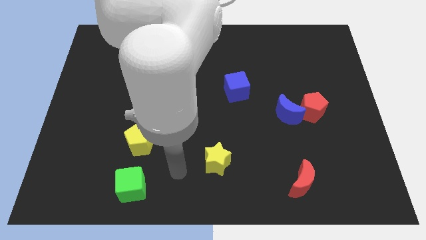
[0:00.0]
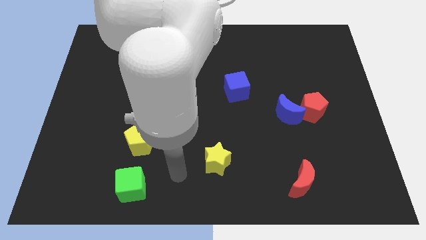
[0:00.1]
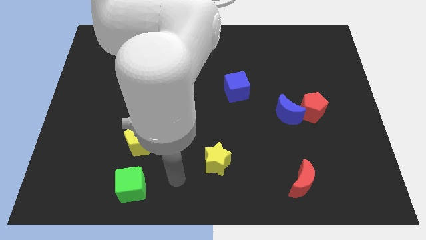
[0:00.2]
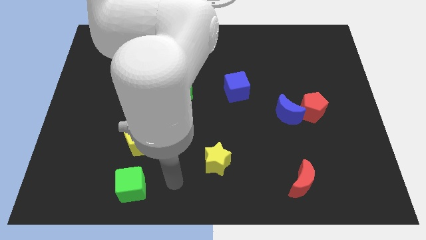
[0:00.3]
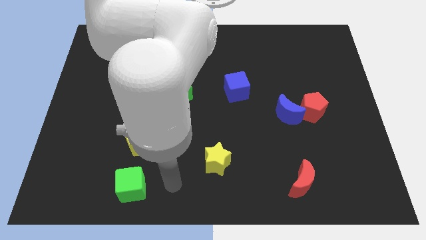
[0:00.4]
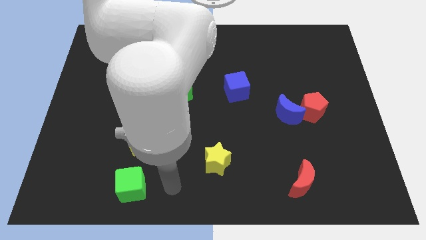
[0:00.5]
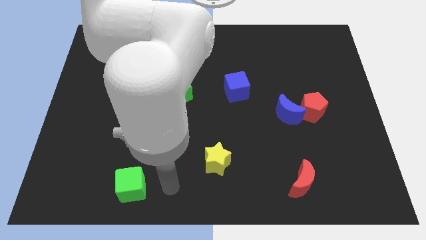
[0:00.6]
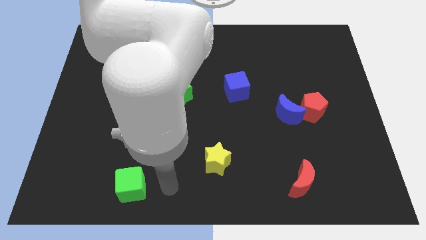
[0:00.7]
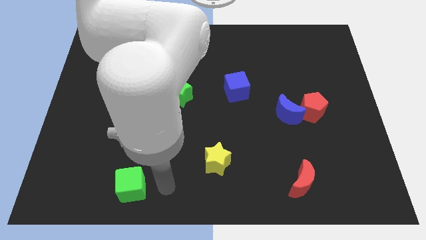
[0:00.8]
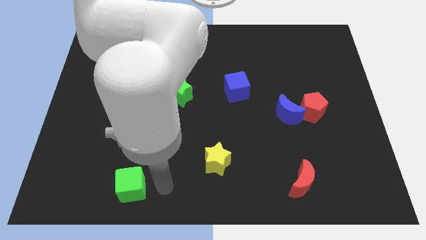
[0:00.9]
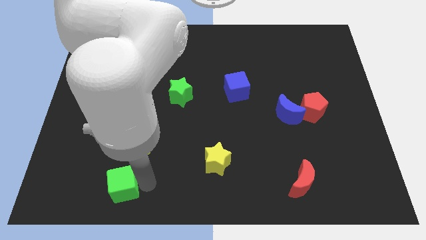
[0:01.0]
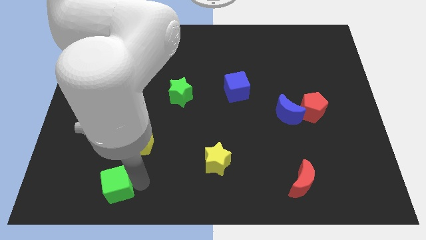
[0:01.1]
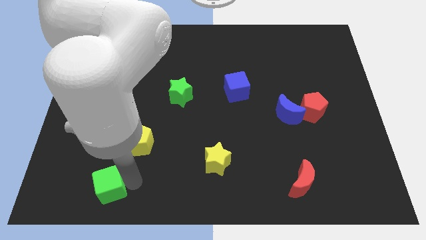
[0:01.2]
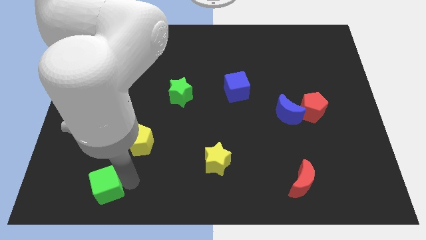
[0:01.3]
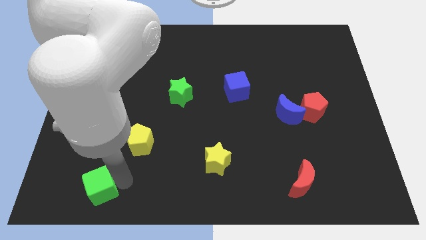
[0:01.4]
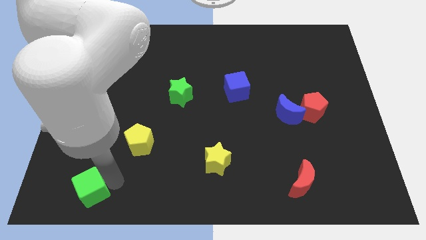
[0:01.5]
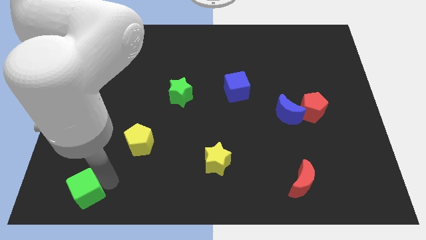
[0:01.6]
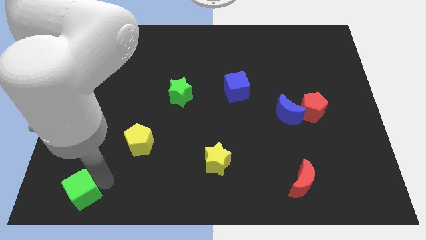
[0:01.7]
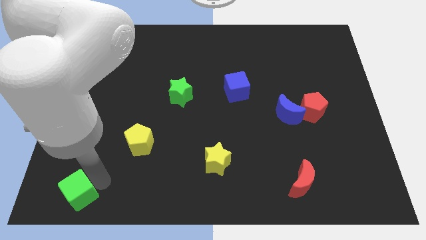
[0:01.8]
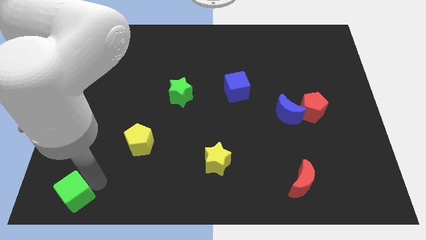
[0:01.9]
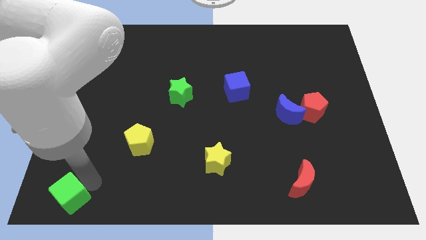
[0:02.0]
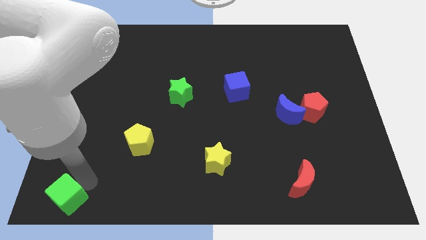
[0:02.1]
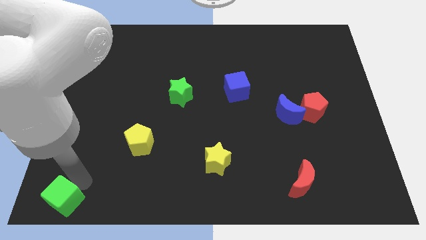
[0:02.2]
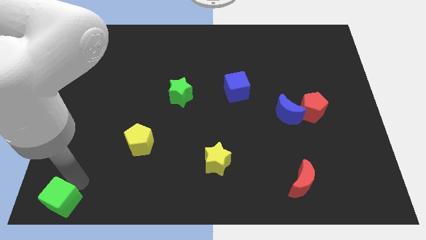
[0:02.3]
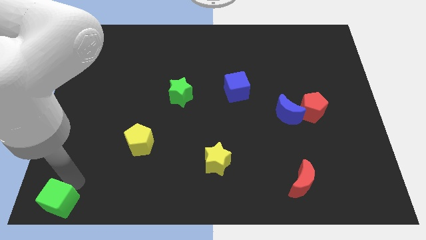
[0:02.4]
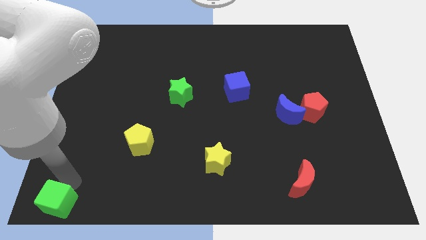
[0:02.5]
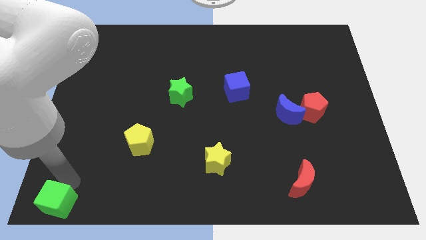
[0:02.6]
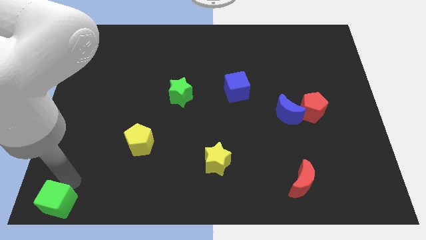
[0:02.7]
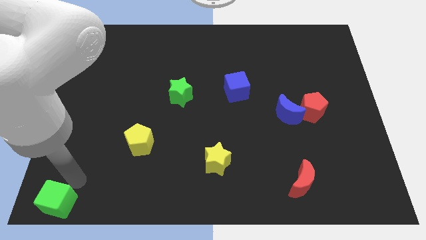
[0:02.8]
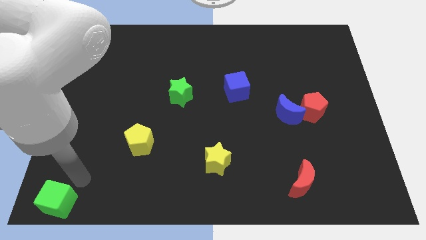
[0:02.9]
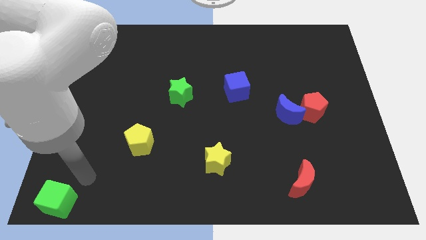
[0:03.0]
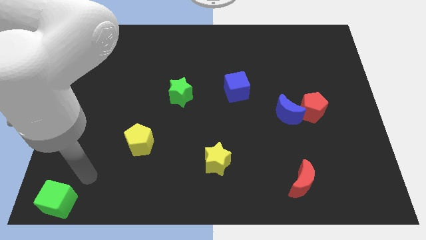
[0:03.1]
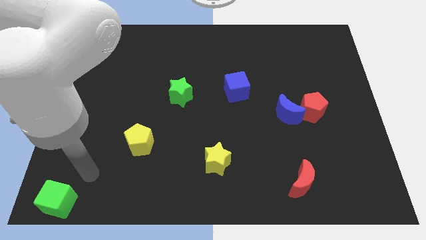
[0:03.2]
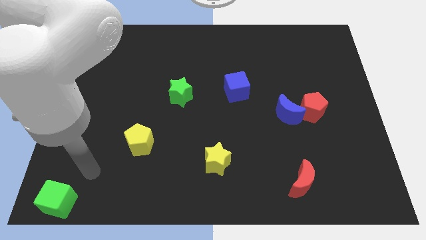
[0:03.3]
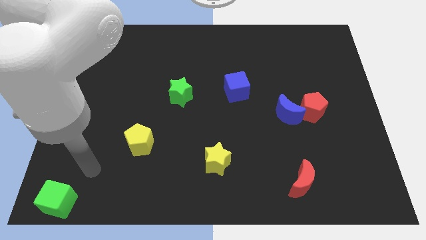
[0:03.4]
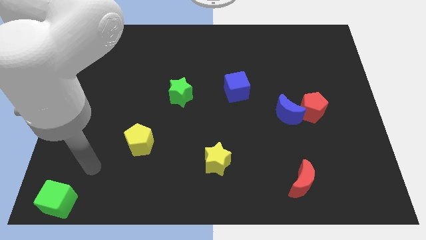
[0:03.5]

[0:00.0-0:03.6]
put the green cube diagonally bottom left to the yellow pentagon

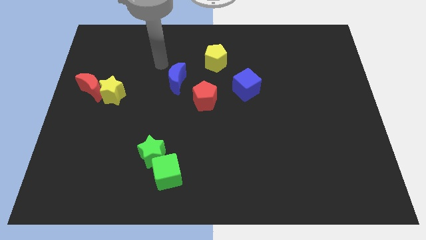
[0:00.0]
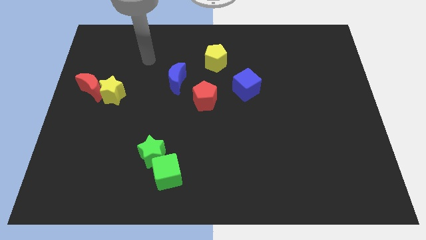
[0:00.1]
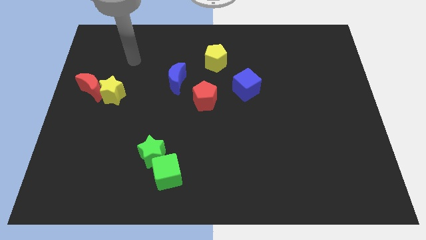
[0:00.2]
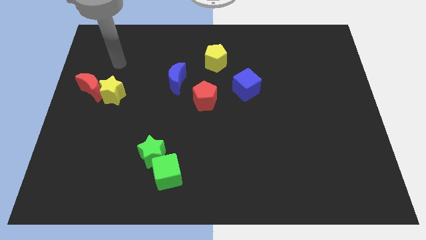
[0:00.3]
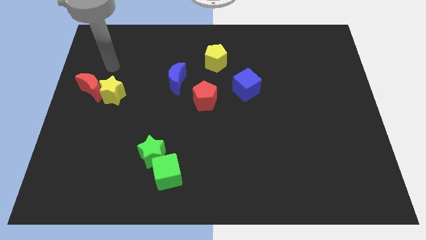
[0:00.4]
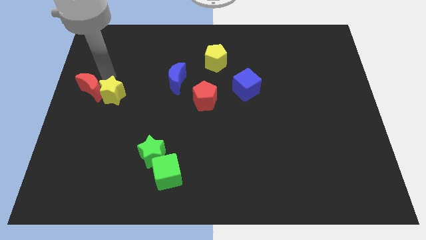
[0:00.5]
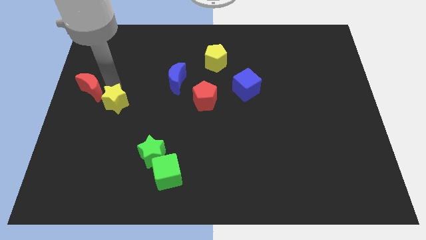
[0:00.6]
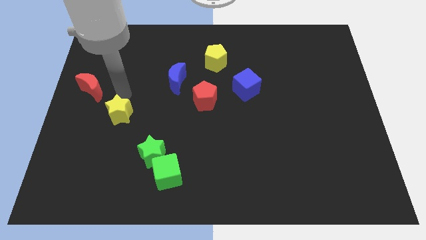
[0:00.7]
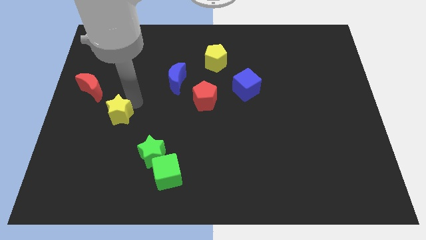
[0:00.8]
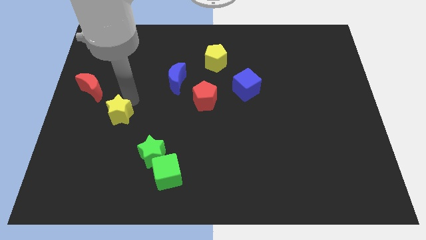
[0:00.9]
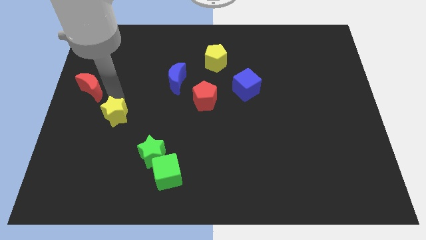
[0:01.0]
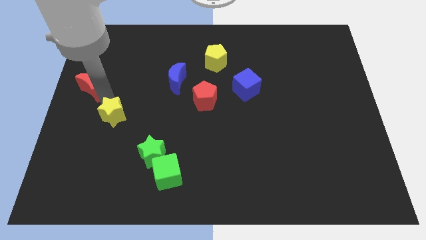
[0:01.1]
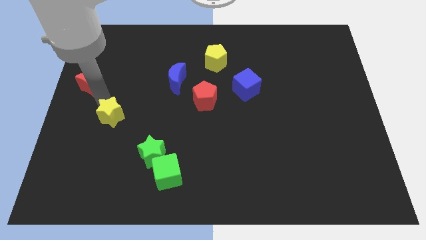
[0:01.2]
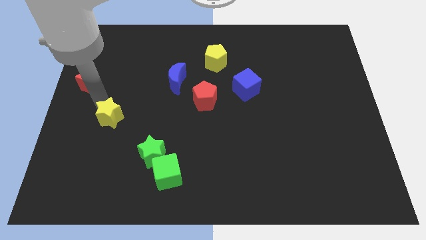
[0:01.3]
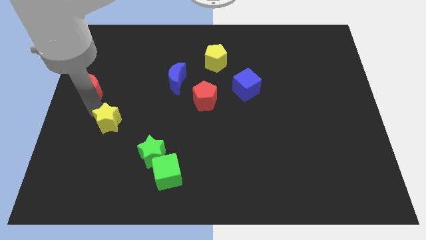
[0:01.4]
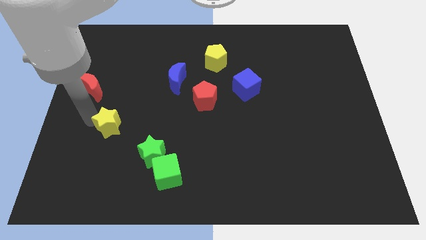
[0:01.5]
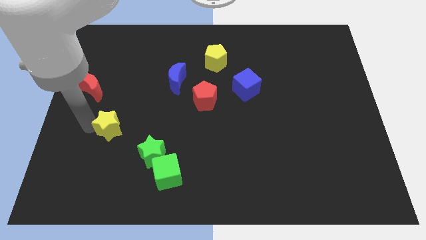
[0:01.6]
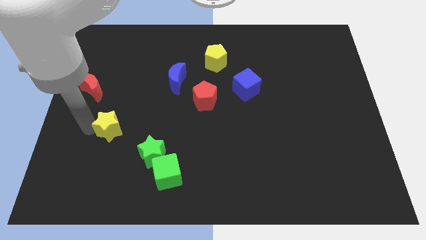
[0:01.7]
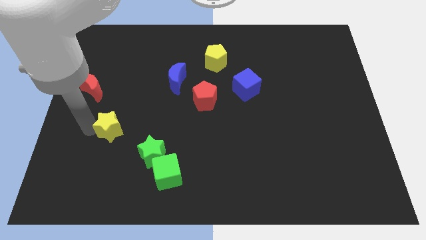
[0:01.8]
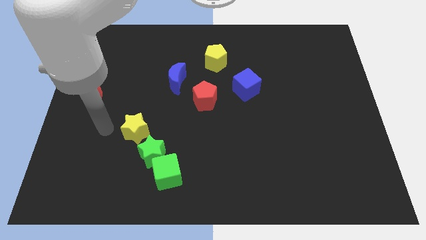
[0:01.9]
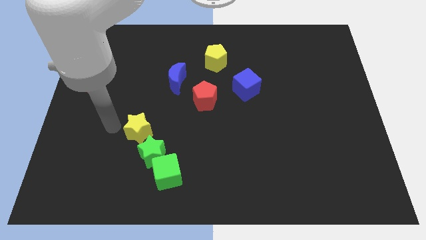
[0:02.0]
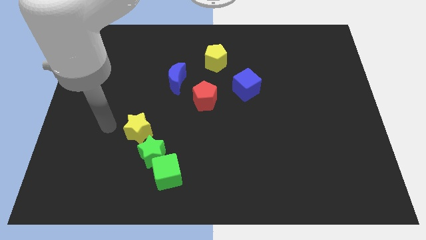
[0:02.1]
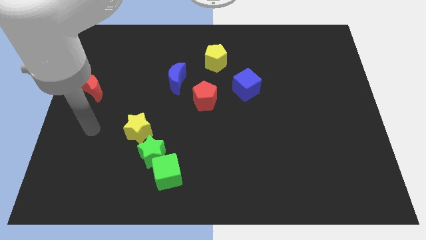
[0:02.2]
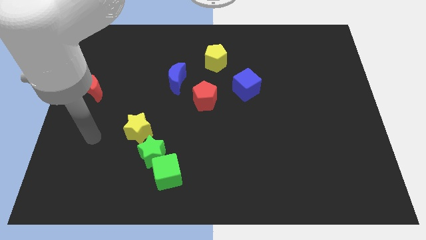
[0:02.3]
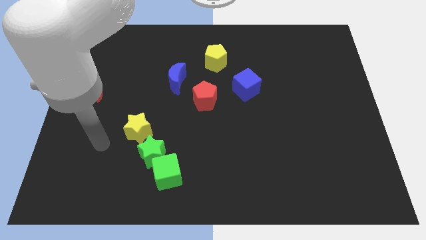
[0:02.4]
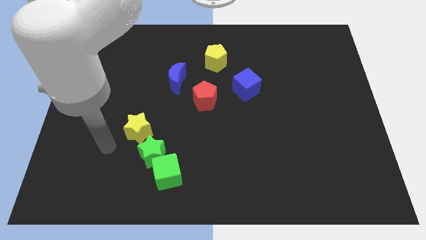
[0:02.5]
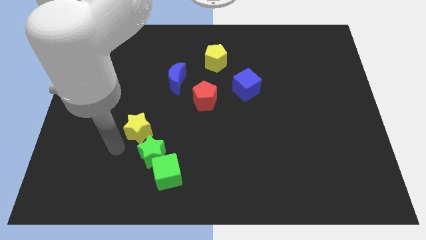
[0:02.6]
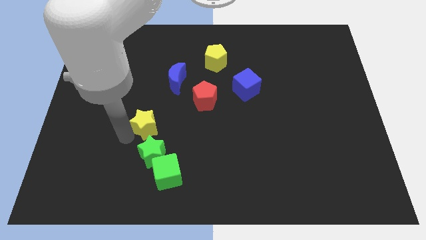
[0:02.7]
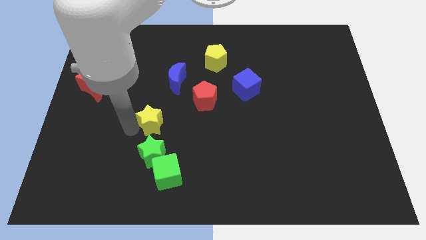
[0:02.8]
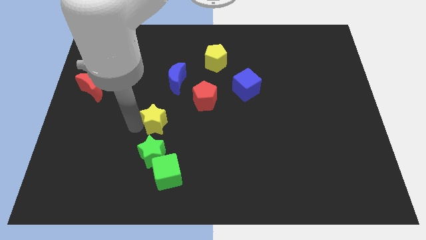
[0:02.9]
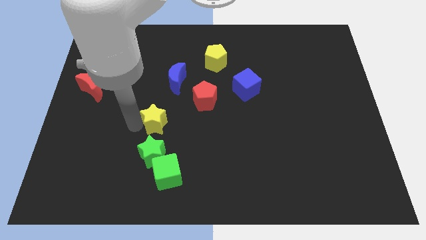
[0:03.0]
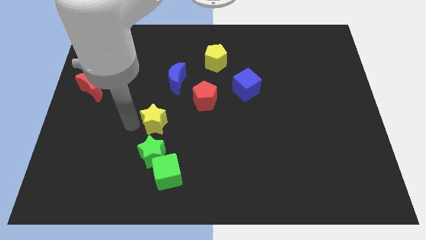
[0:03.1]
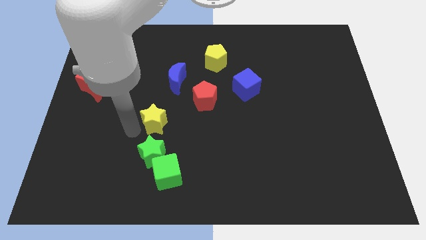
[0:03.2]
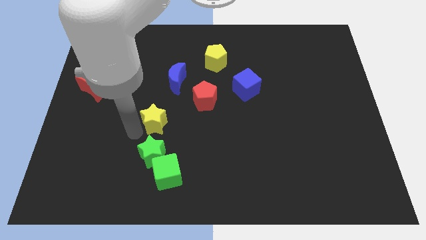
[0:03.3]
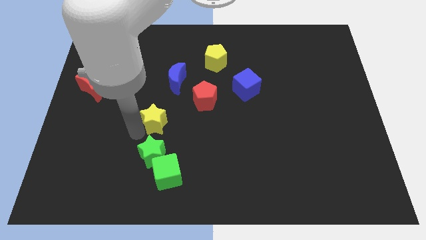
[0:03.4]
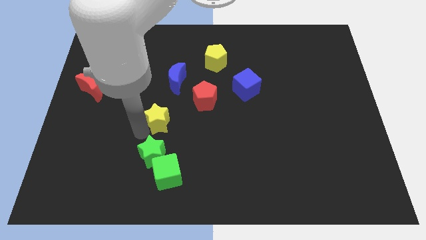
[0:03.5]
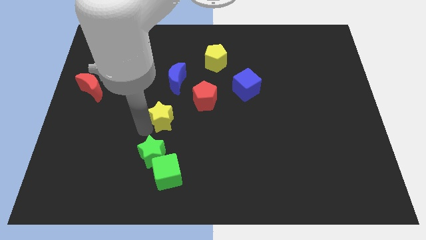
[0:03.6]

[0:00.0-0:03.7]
separate green star from the red crescent

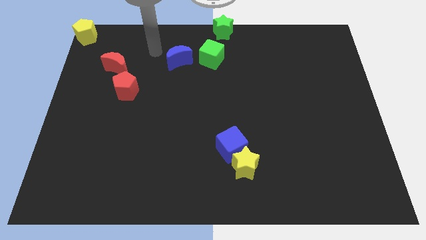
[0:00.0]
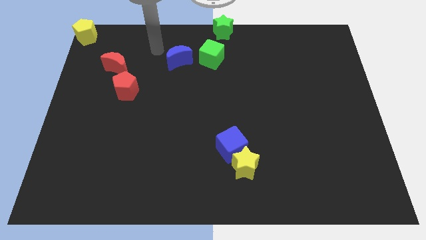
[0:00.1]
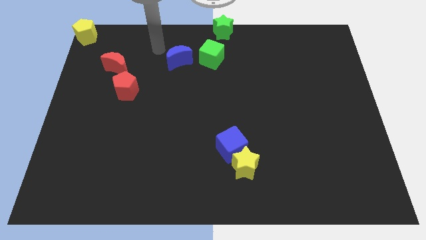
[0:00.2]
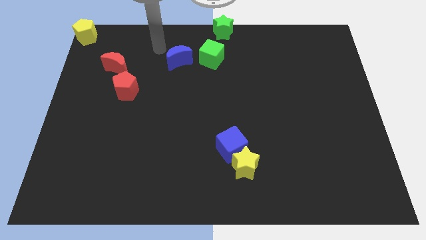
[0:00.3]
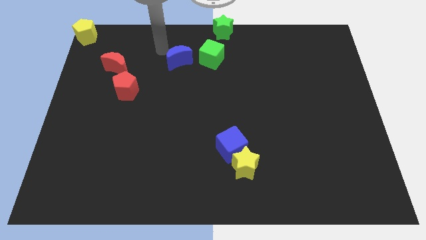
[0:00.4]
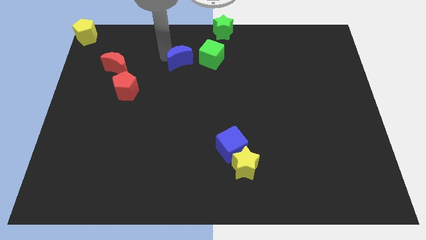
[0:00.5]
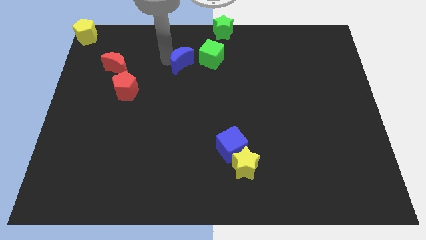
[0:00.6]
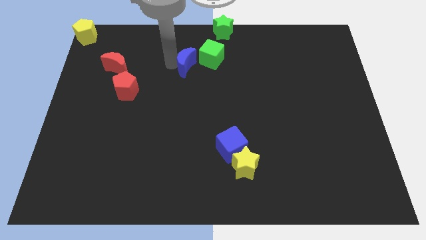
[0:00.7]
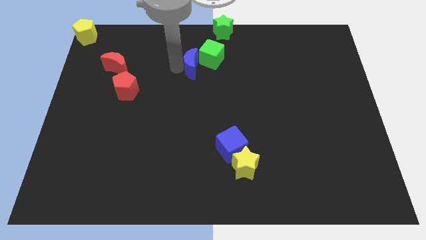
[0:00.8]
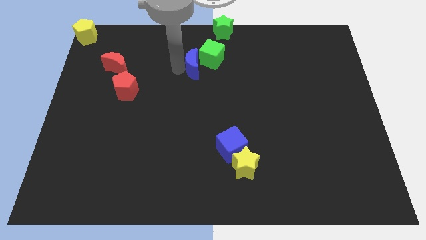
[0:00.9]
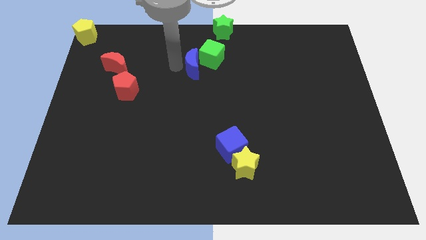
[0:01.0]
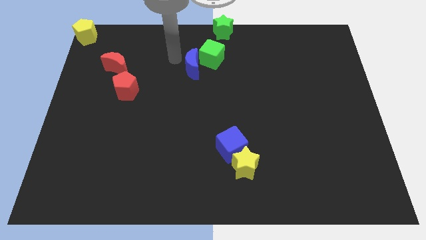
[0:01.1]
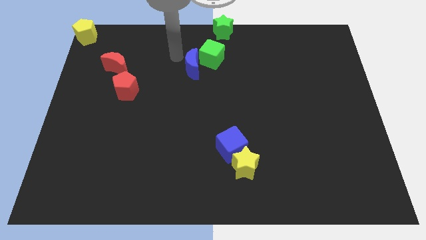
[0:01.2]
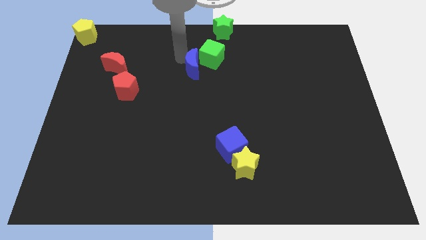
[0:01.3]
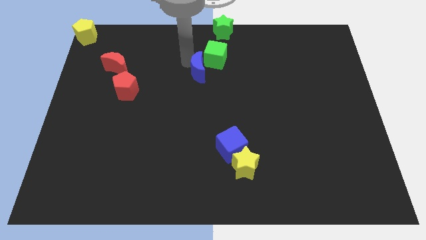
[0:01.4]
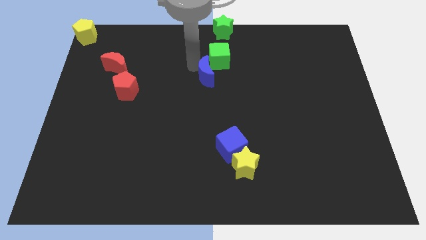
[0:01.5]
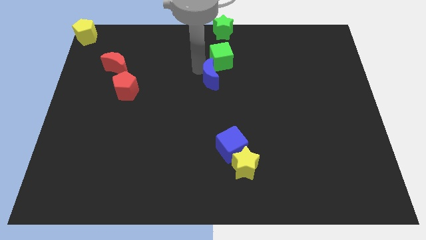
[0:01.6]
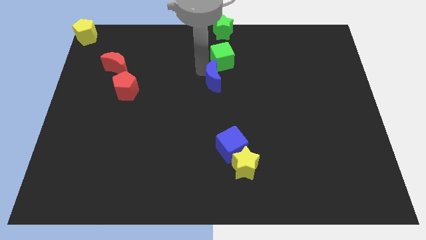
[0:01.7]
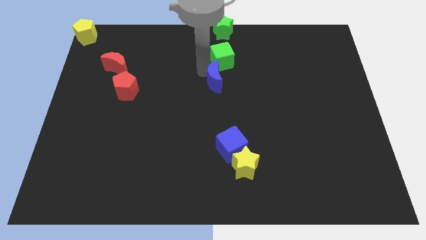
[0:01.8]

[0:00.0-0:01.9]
move blue moon into green cube
